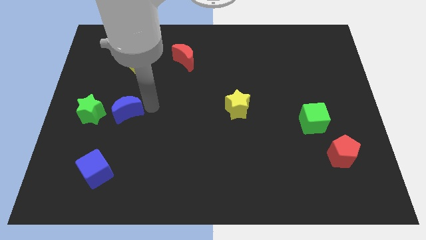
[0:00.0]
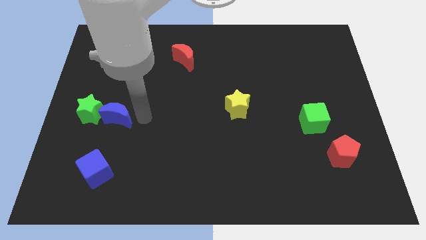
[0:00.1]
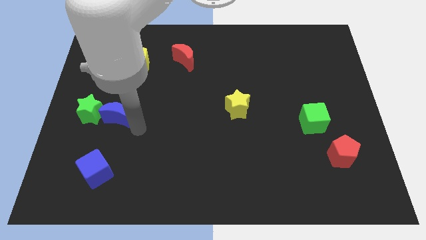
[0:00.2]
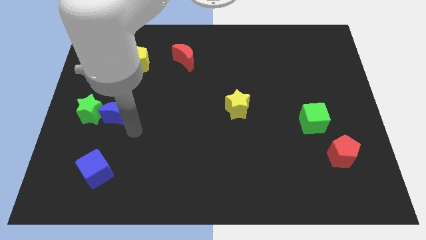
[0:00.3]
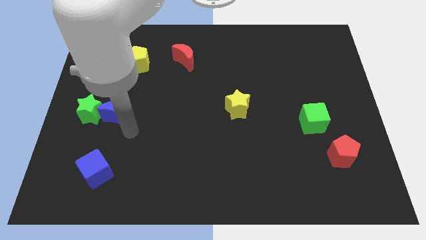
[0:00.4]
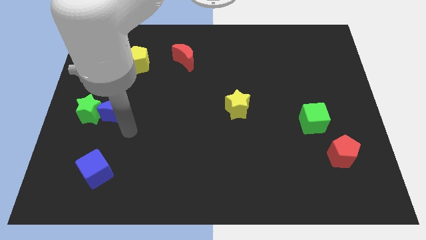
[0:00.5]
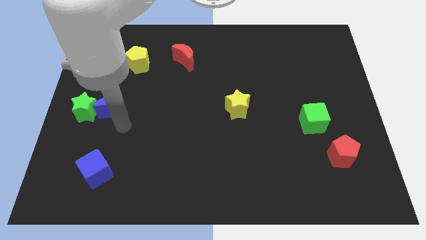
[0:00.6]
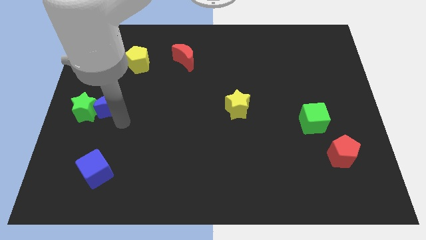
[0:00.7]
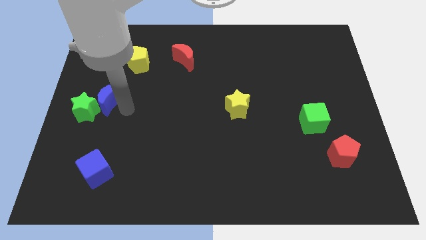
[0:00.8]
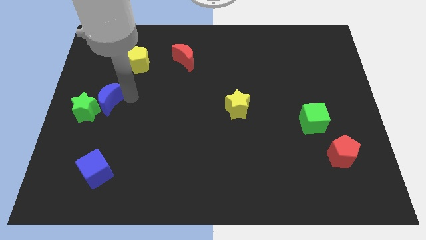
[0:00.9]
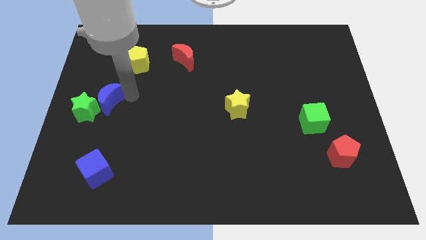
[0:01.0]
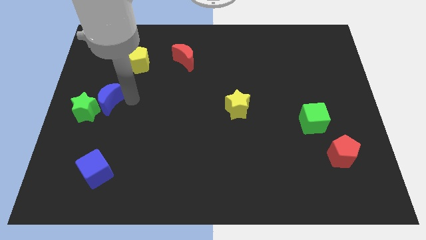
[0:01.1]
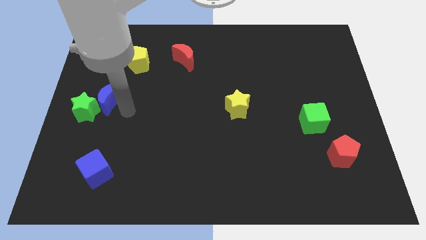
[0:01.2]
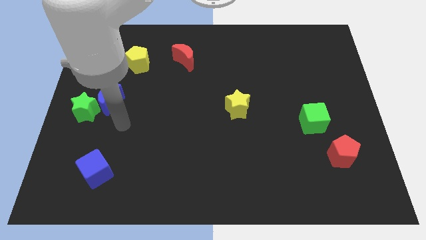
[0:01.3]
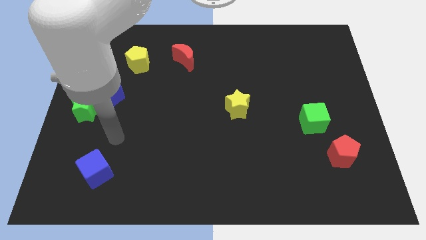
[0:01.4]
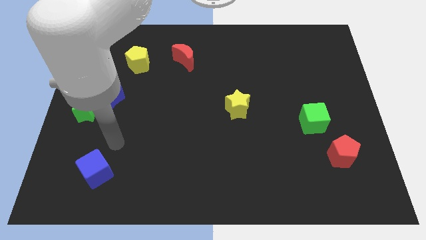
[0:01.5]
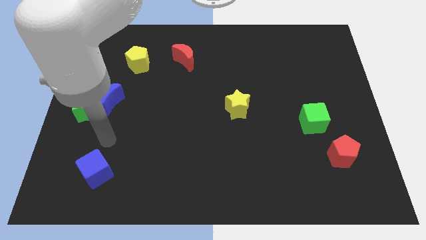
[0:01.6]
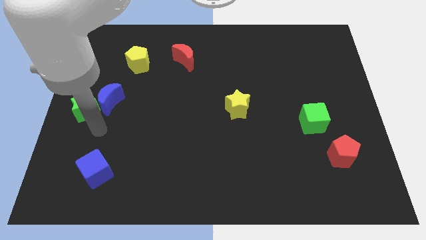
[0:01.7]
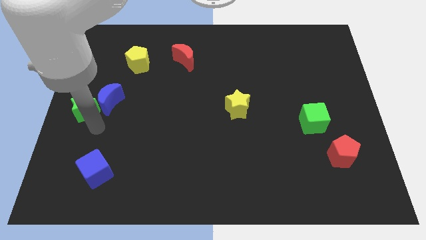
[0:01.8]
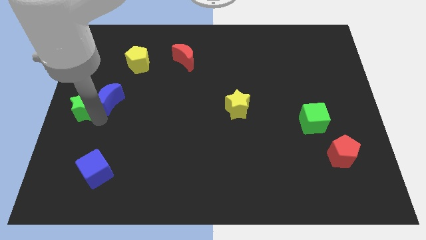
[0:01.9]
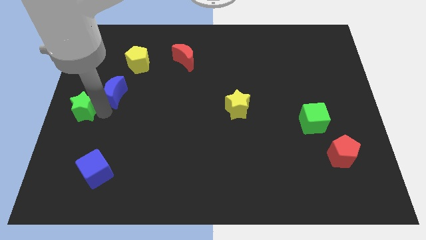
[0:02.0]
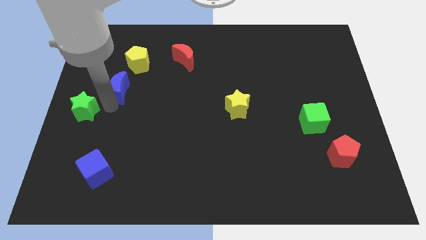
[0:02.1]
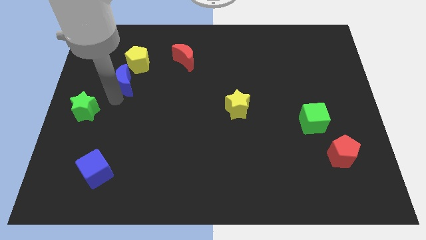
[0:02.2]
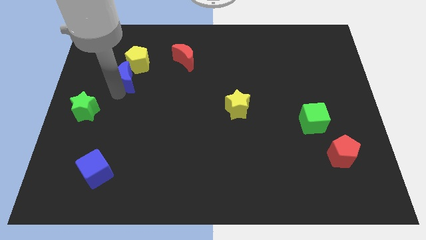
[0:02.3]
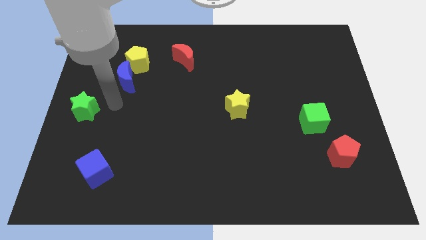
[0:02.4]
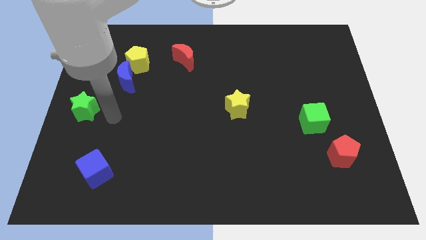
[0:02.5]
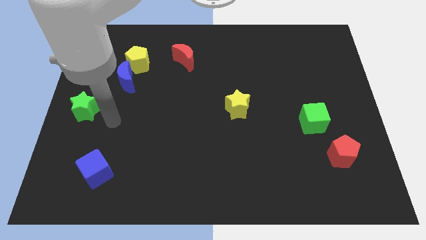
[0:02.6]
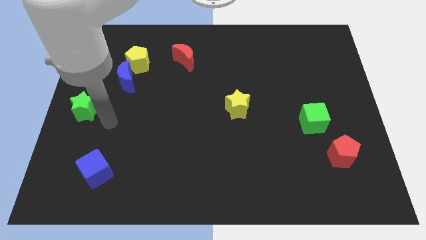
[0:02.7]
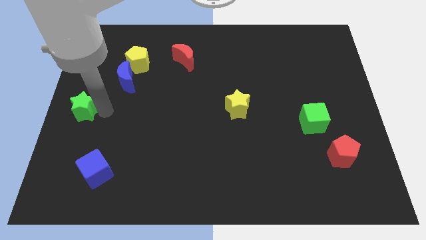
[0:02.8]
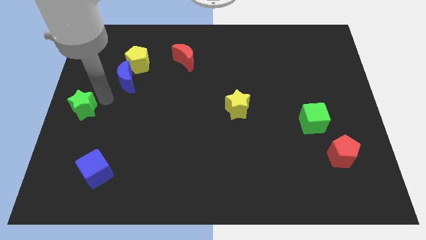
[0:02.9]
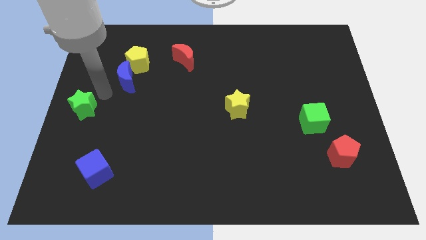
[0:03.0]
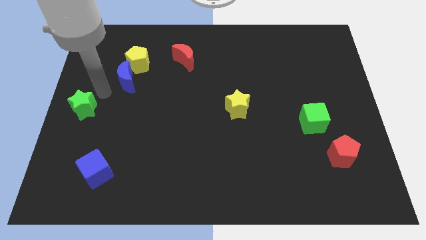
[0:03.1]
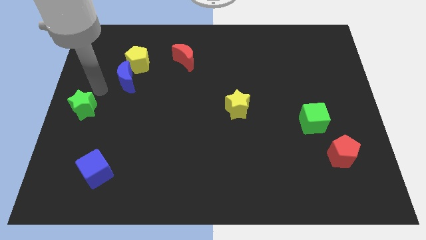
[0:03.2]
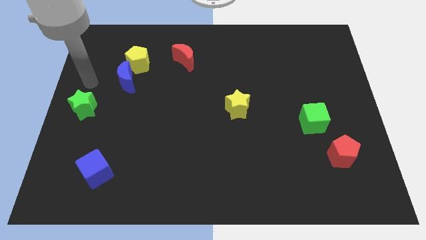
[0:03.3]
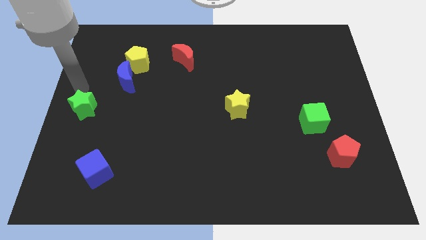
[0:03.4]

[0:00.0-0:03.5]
move the blue crescent into the yellow pentagon

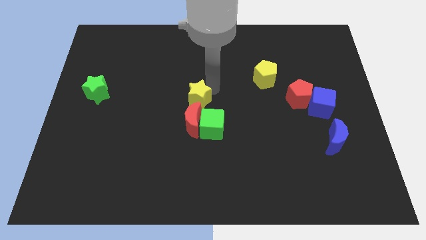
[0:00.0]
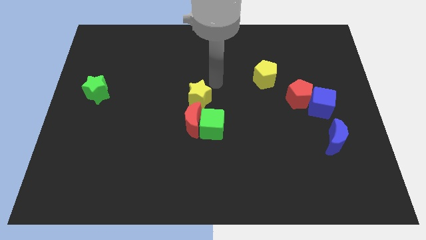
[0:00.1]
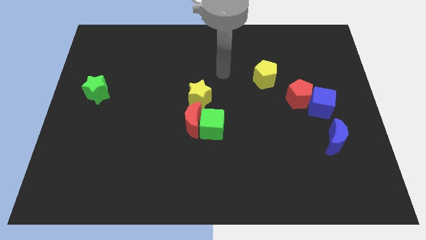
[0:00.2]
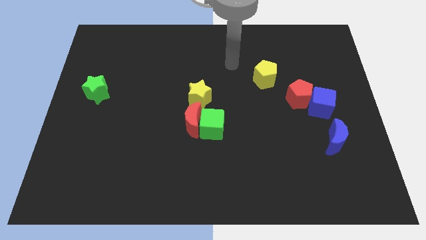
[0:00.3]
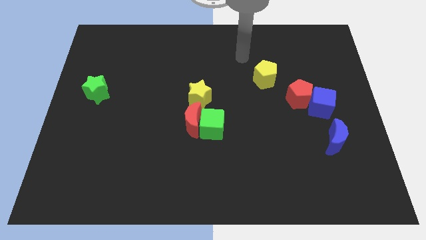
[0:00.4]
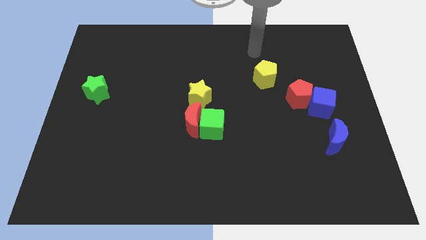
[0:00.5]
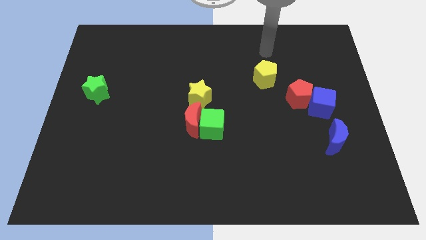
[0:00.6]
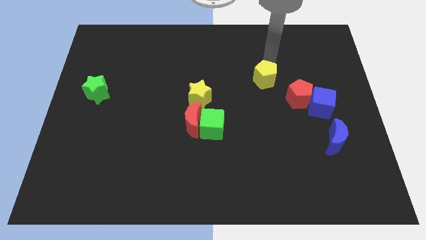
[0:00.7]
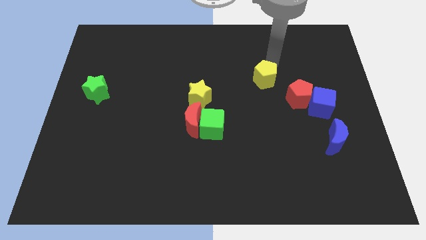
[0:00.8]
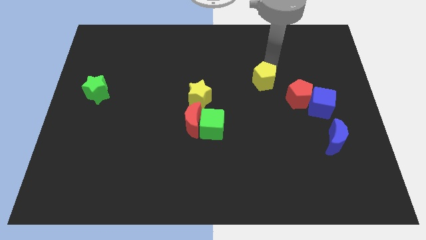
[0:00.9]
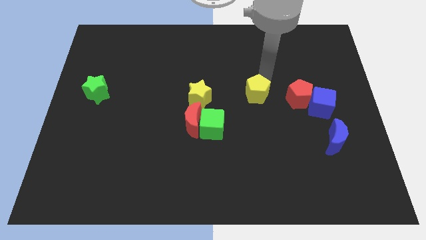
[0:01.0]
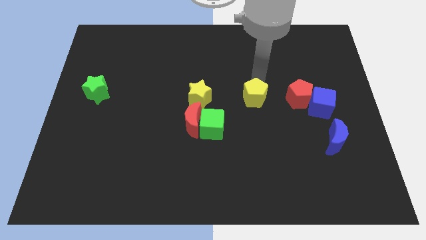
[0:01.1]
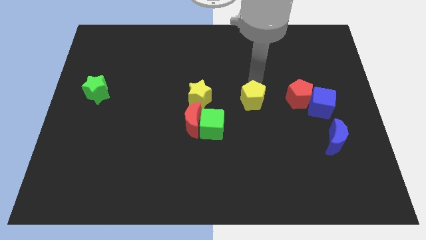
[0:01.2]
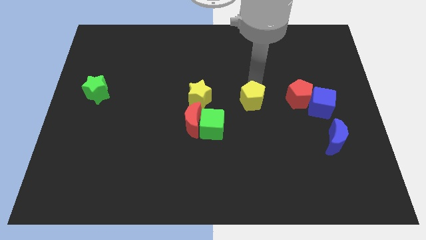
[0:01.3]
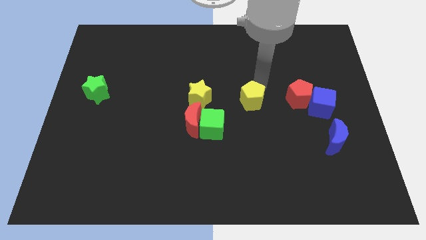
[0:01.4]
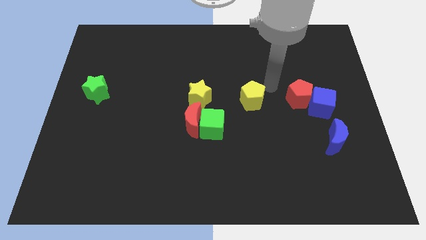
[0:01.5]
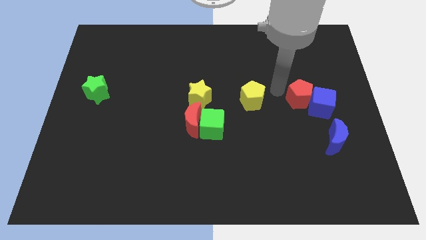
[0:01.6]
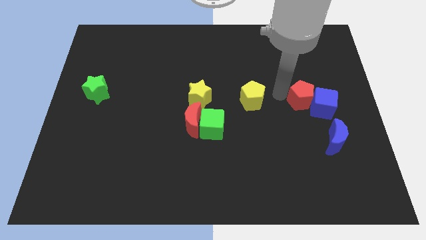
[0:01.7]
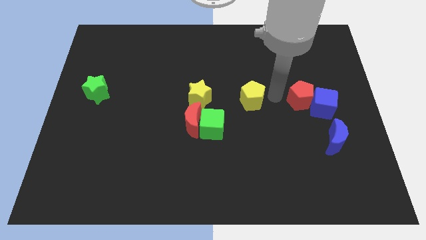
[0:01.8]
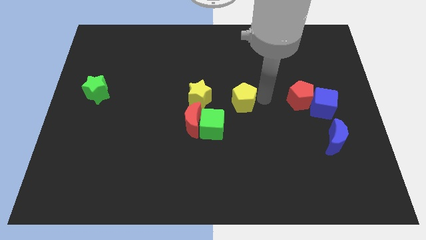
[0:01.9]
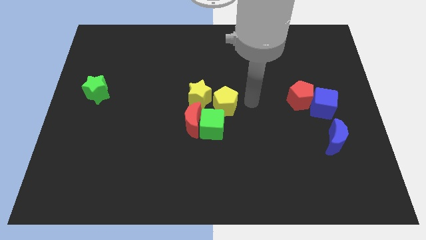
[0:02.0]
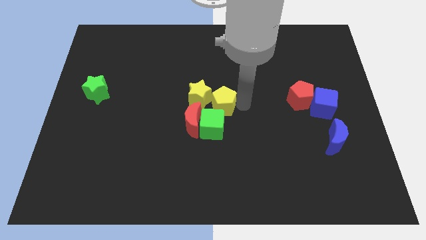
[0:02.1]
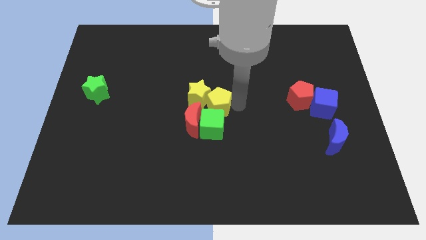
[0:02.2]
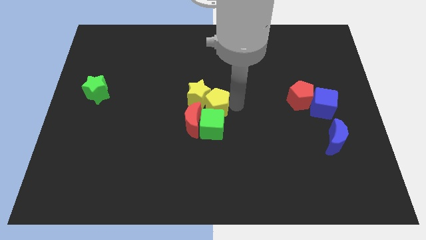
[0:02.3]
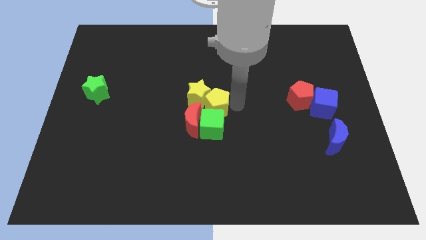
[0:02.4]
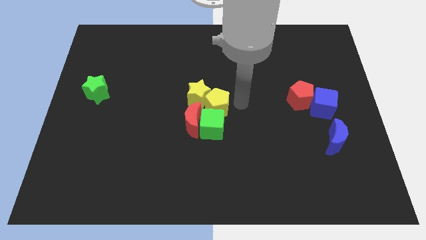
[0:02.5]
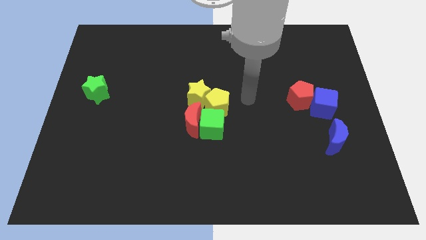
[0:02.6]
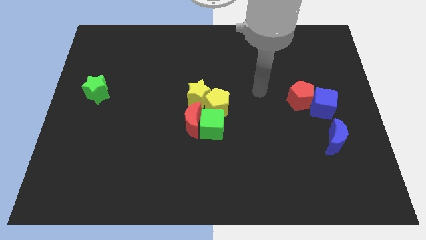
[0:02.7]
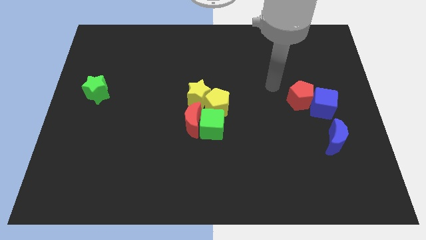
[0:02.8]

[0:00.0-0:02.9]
place yellow pentagon to the right of yellow star

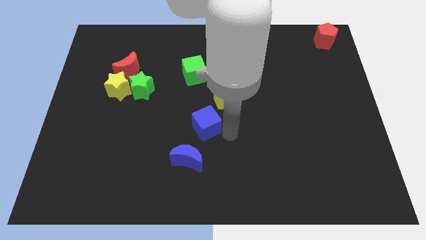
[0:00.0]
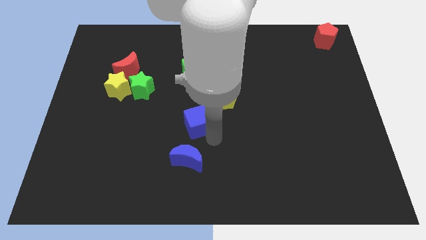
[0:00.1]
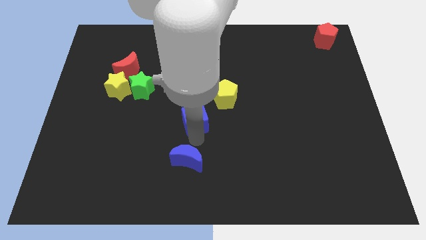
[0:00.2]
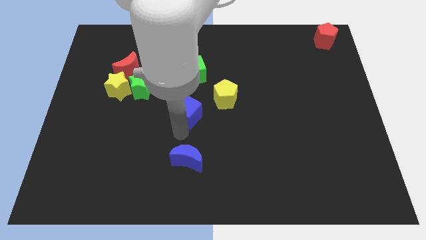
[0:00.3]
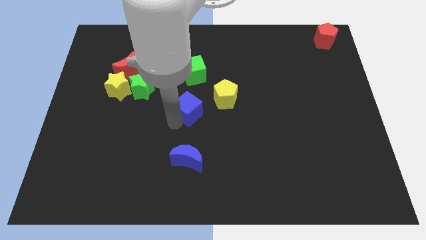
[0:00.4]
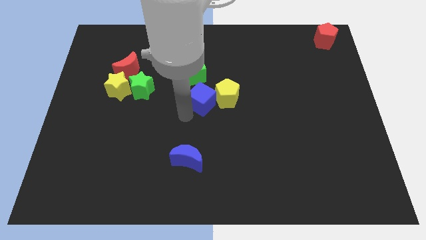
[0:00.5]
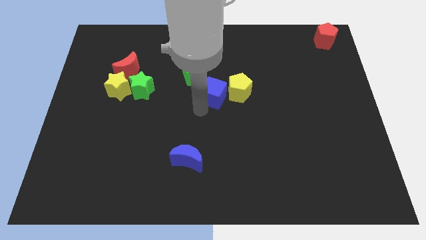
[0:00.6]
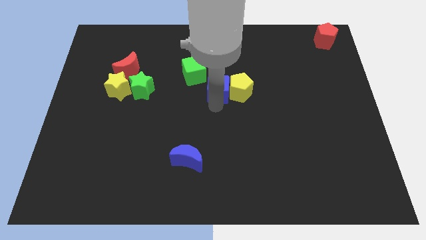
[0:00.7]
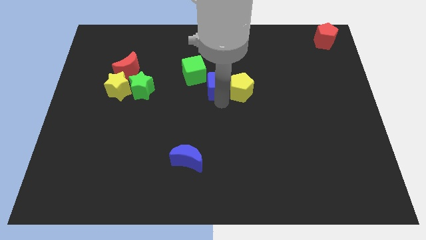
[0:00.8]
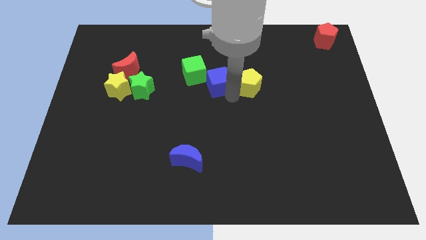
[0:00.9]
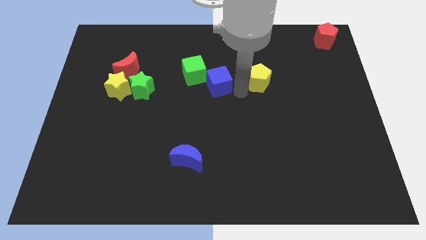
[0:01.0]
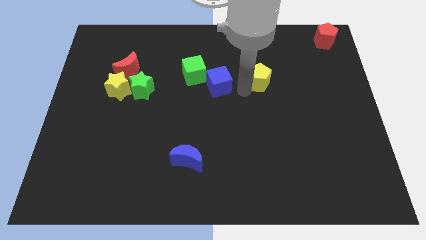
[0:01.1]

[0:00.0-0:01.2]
separate yellow pentagon from blue cube

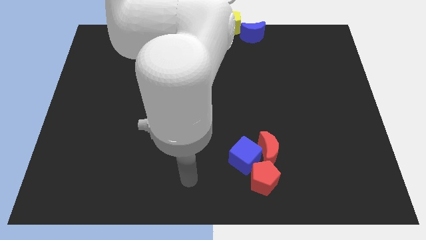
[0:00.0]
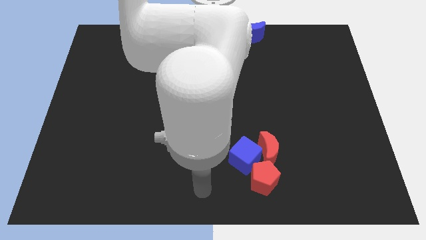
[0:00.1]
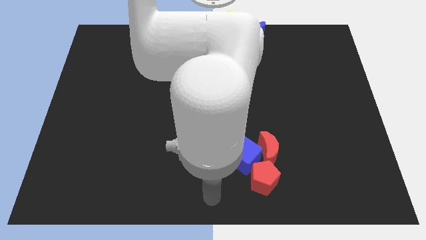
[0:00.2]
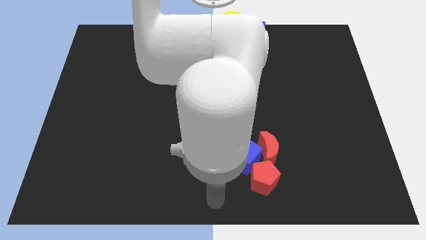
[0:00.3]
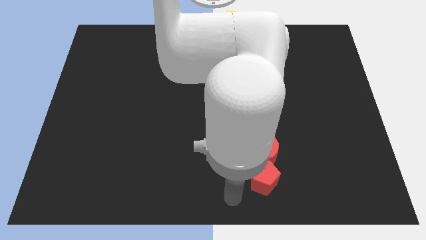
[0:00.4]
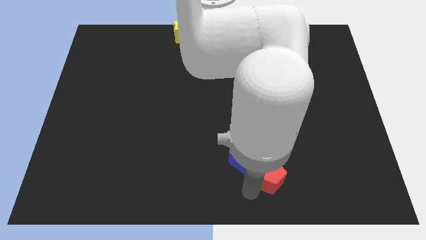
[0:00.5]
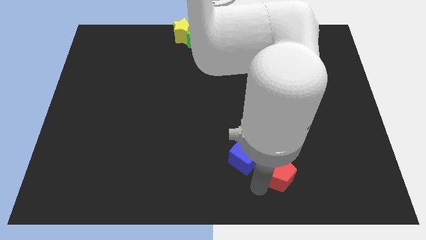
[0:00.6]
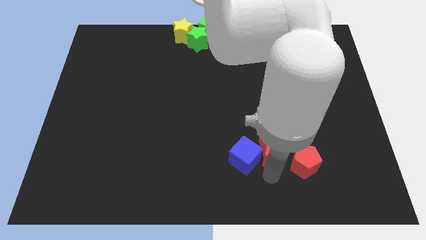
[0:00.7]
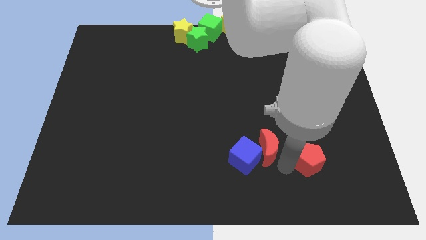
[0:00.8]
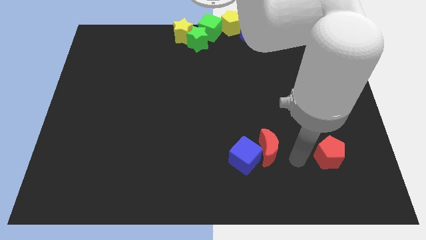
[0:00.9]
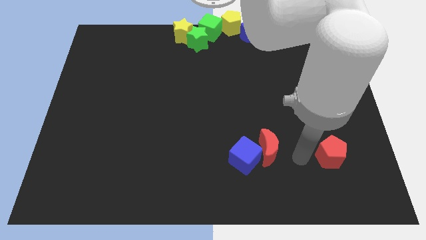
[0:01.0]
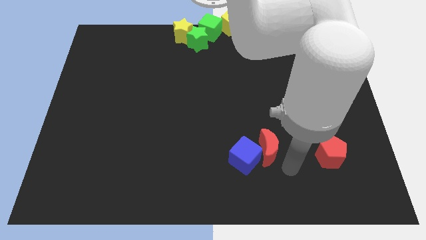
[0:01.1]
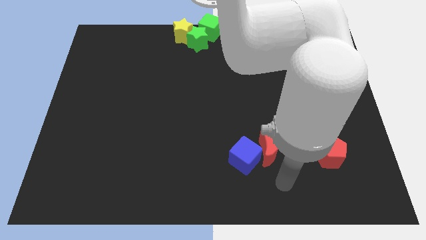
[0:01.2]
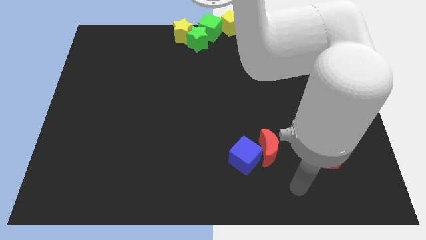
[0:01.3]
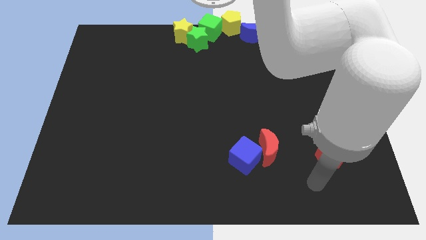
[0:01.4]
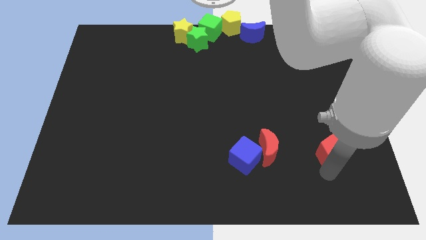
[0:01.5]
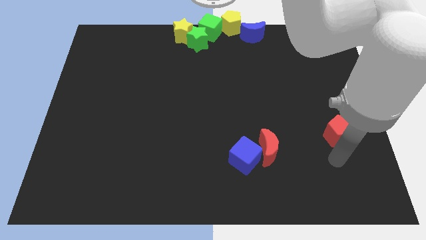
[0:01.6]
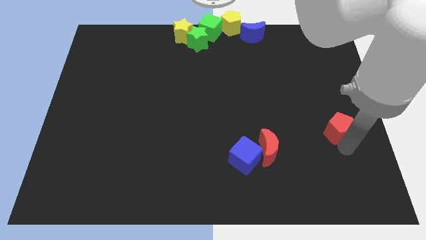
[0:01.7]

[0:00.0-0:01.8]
push the red pentagon away from the blue cube
